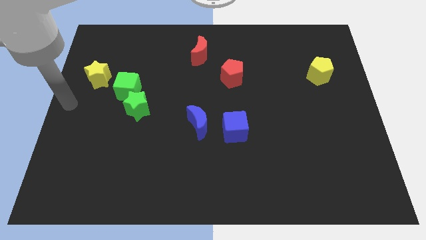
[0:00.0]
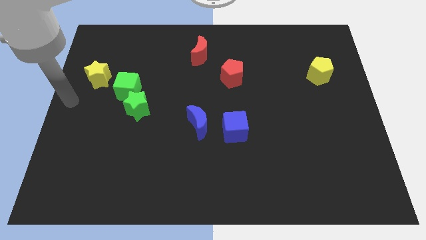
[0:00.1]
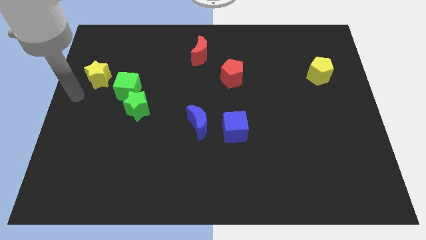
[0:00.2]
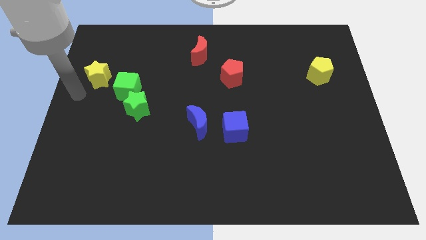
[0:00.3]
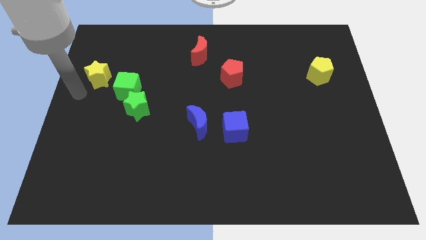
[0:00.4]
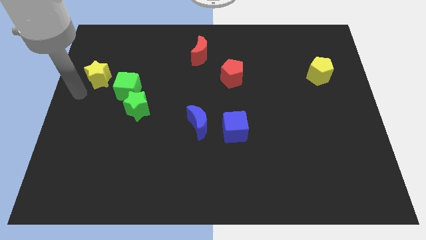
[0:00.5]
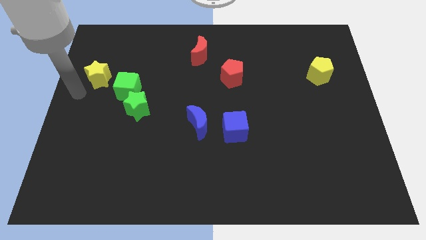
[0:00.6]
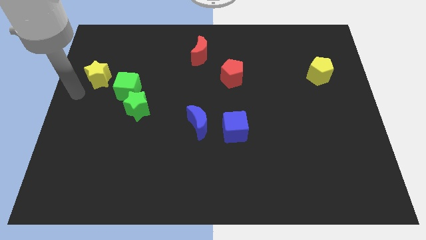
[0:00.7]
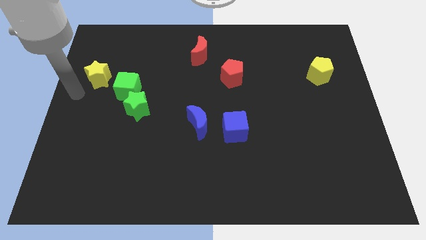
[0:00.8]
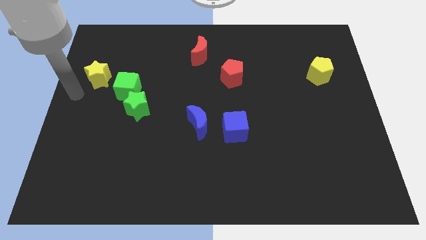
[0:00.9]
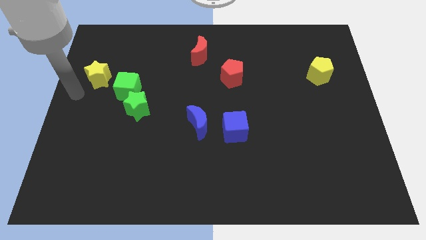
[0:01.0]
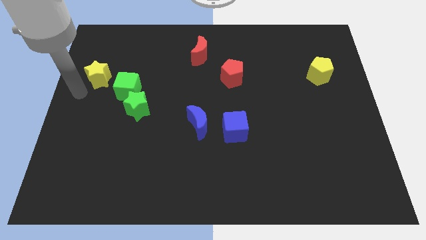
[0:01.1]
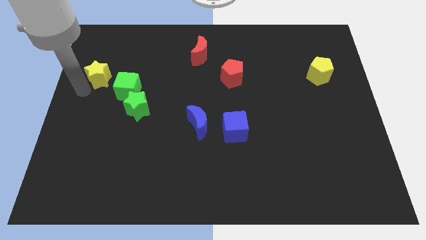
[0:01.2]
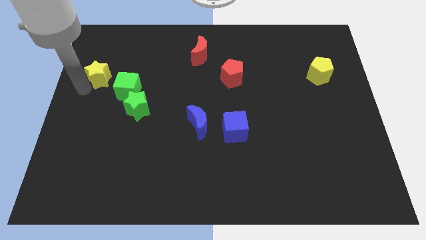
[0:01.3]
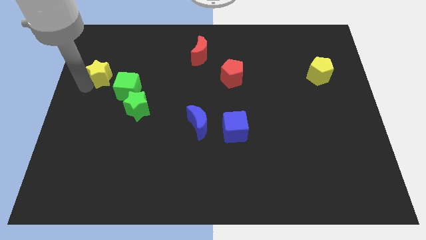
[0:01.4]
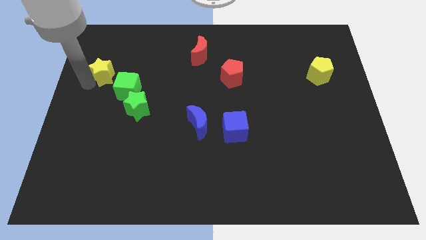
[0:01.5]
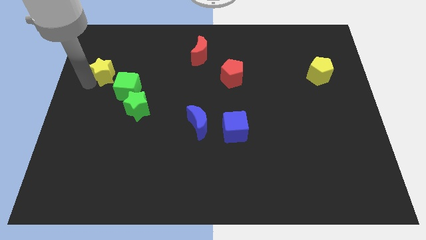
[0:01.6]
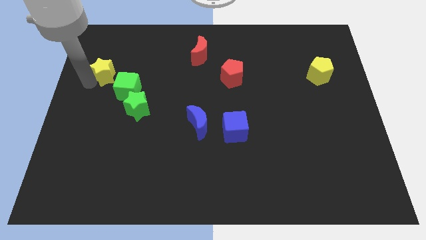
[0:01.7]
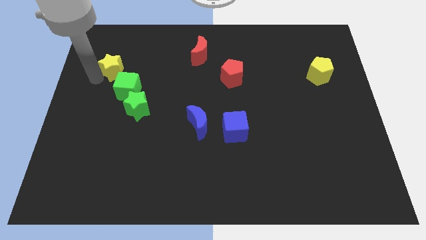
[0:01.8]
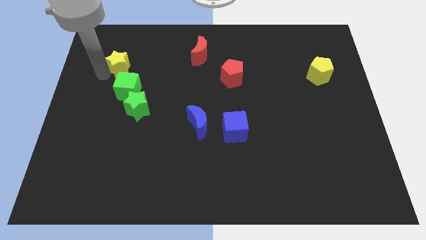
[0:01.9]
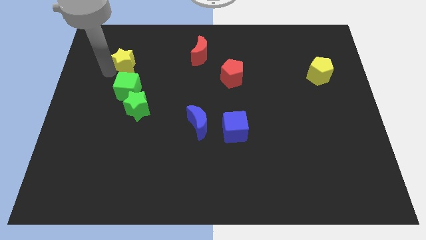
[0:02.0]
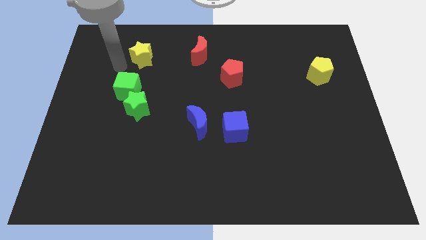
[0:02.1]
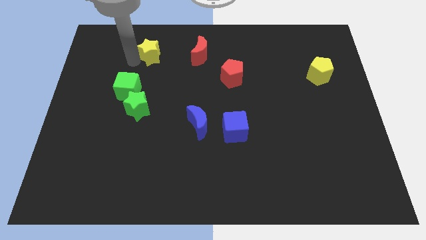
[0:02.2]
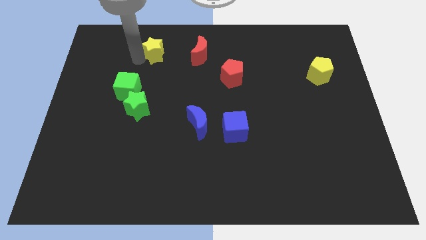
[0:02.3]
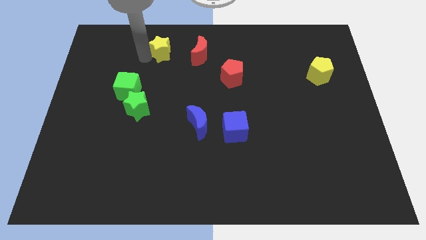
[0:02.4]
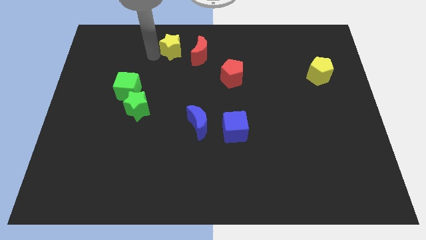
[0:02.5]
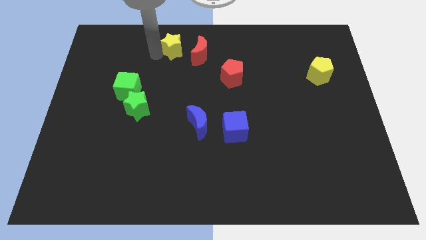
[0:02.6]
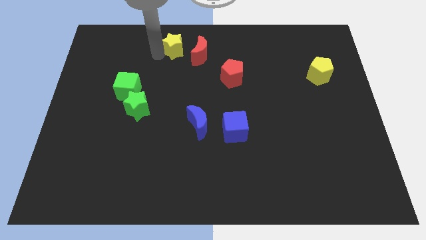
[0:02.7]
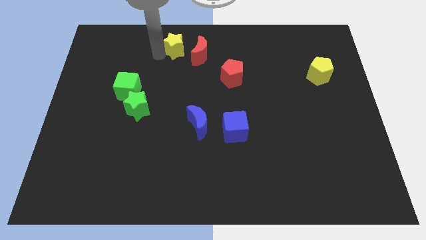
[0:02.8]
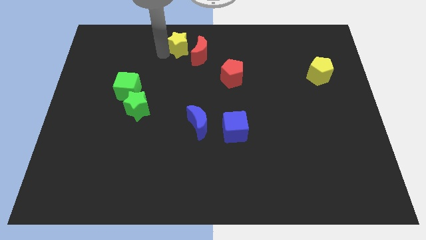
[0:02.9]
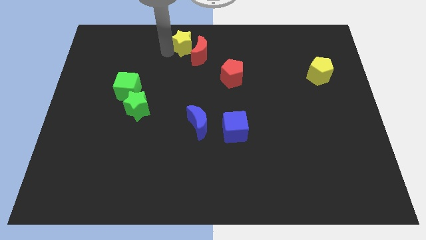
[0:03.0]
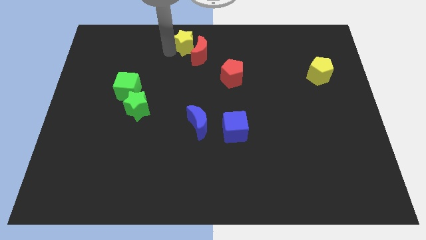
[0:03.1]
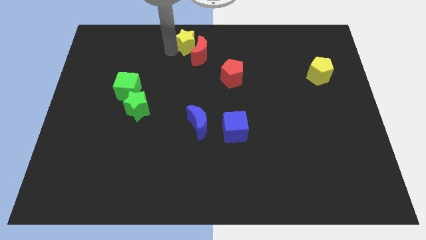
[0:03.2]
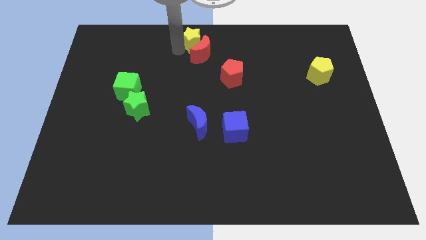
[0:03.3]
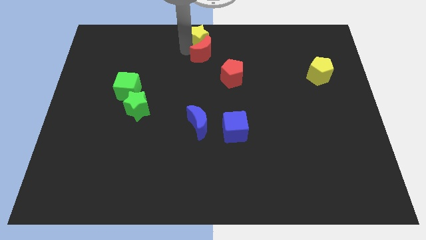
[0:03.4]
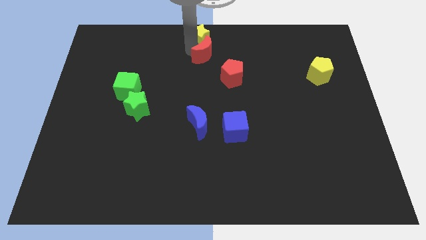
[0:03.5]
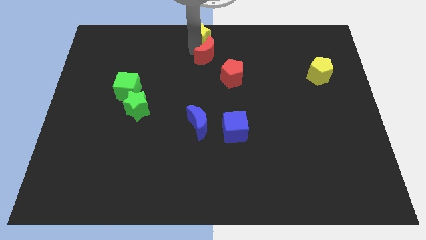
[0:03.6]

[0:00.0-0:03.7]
move the yellow star towards the top center of the board

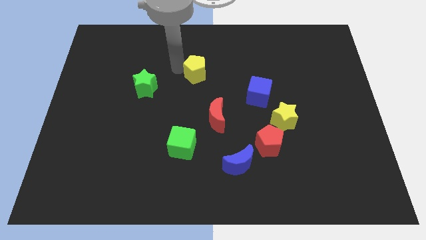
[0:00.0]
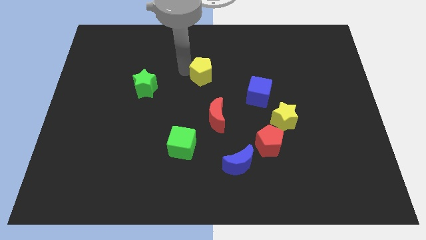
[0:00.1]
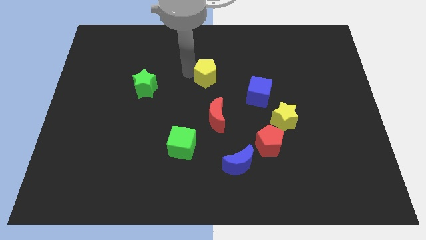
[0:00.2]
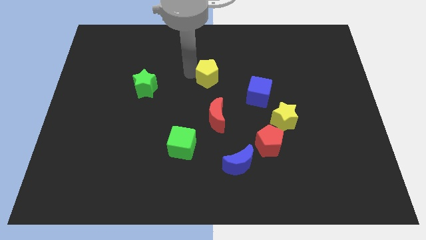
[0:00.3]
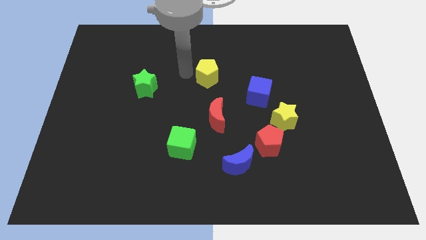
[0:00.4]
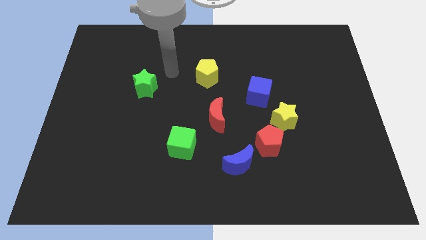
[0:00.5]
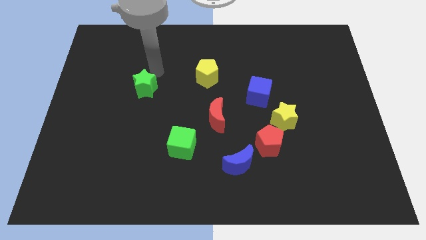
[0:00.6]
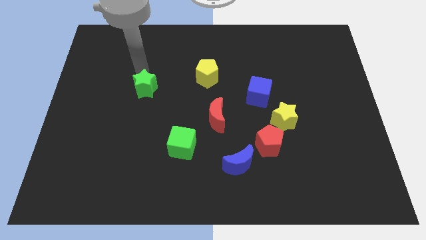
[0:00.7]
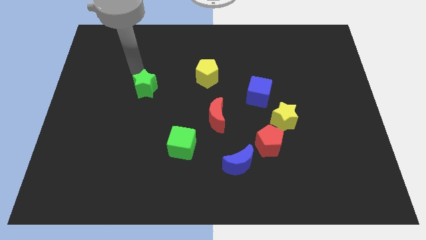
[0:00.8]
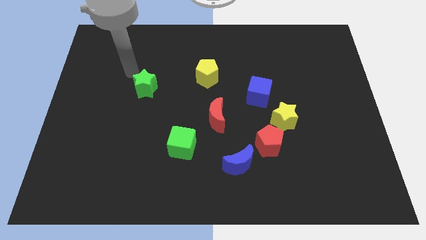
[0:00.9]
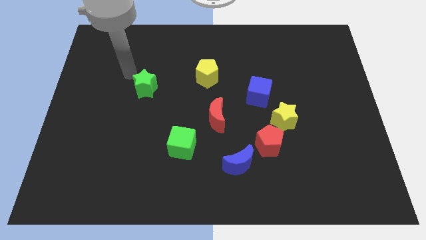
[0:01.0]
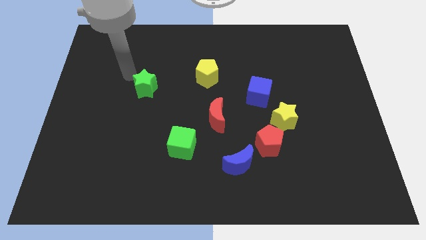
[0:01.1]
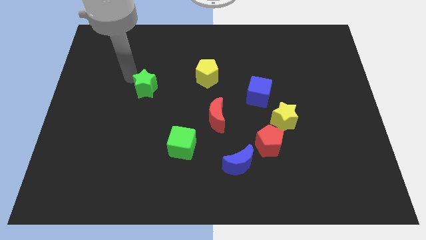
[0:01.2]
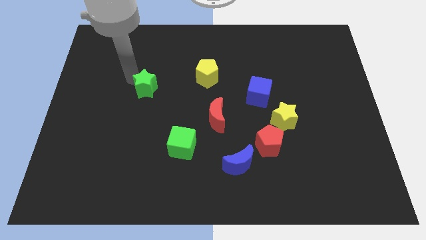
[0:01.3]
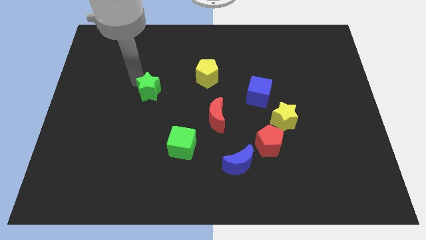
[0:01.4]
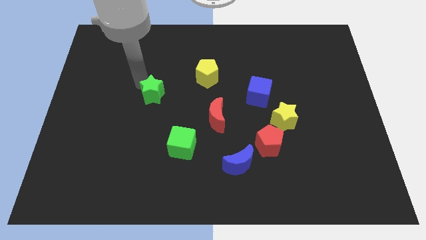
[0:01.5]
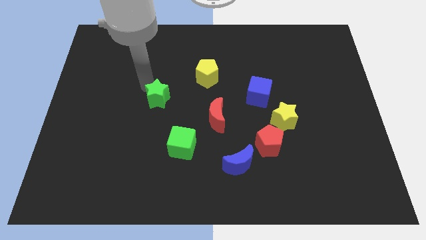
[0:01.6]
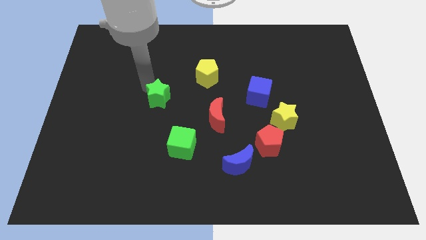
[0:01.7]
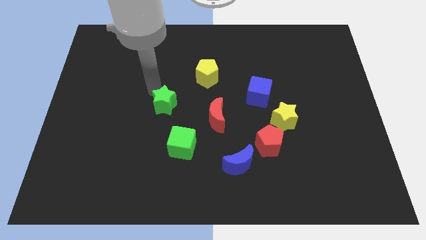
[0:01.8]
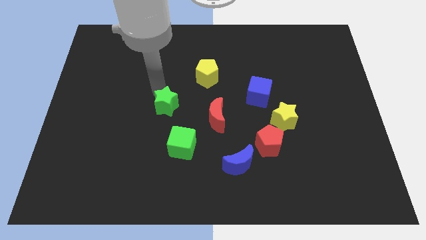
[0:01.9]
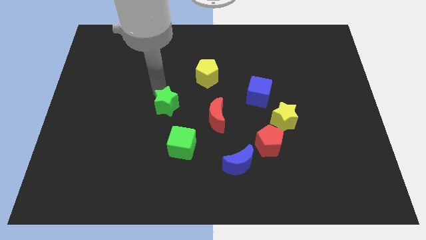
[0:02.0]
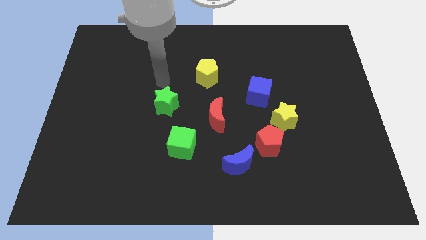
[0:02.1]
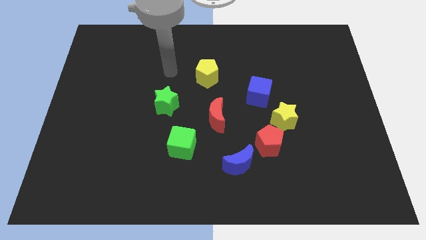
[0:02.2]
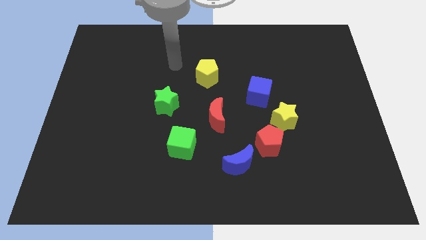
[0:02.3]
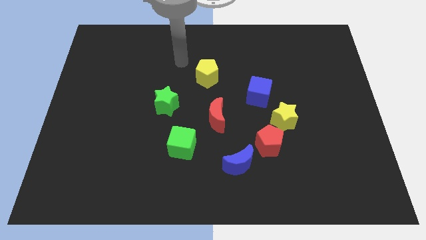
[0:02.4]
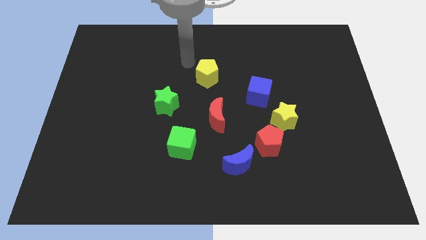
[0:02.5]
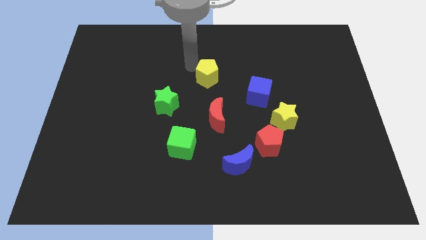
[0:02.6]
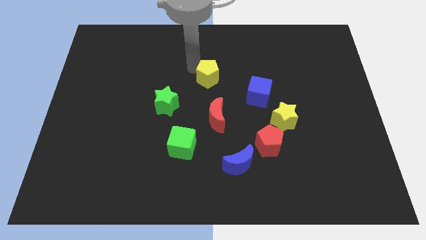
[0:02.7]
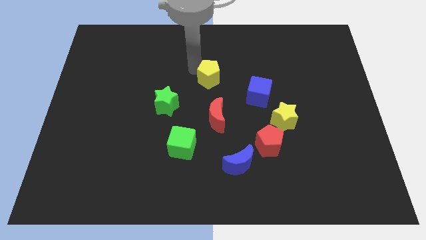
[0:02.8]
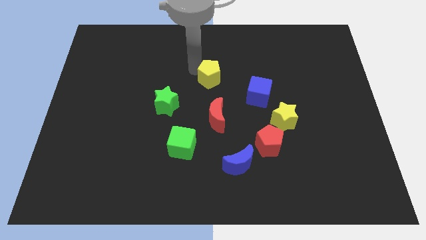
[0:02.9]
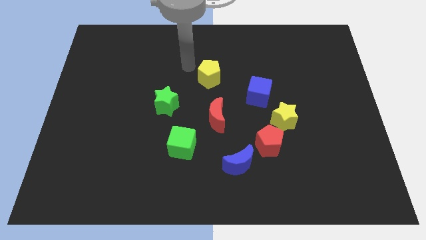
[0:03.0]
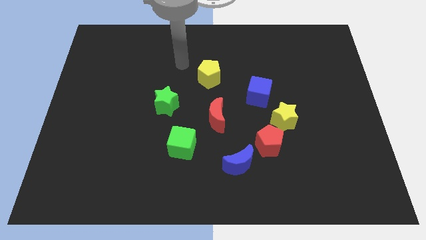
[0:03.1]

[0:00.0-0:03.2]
place green star to the left of red moon

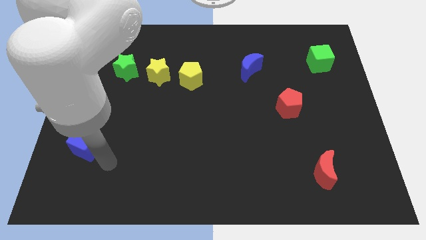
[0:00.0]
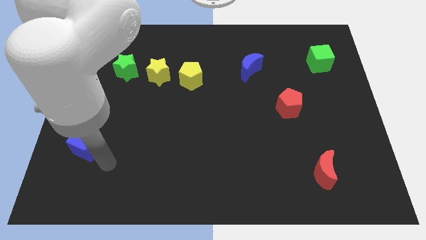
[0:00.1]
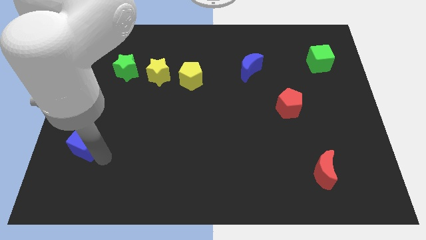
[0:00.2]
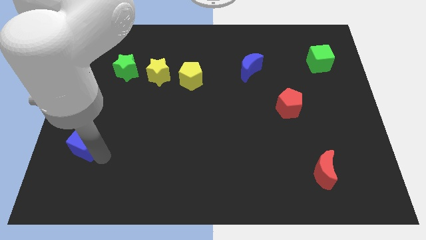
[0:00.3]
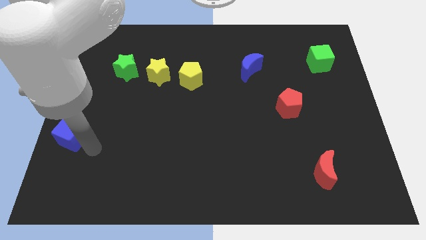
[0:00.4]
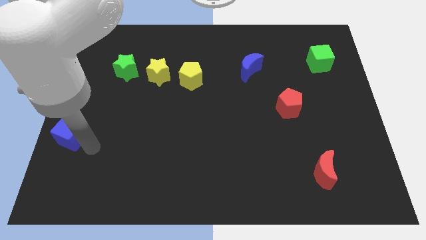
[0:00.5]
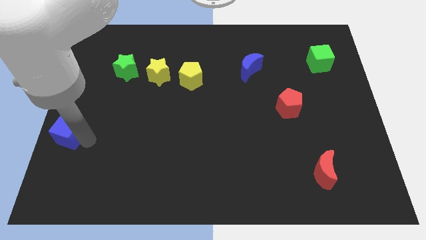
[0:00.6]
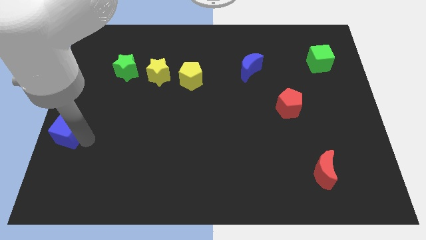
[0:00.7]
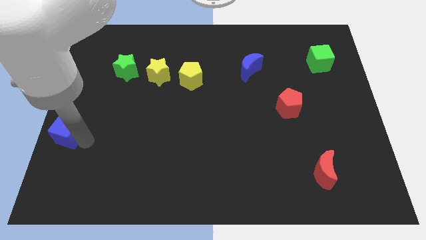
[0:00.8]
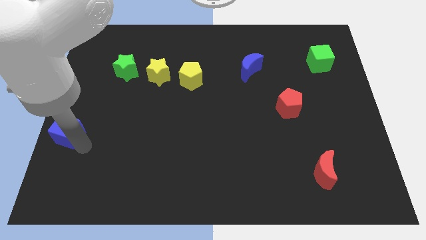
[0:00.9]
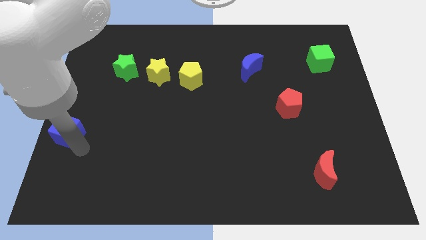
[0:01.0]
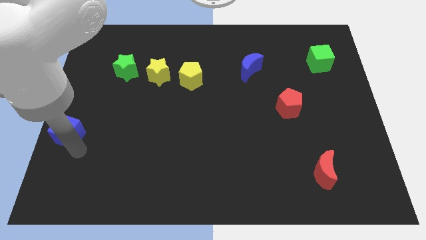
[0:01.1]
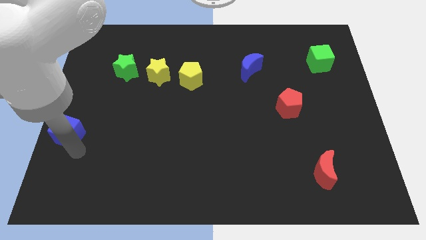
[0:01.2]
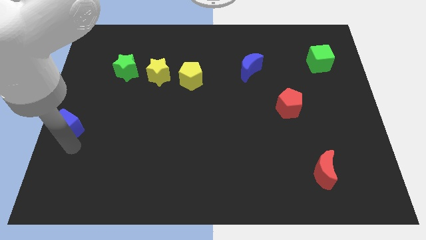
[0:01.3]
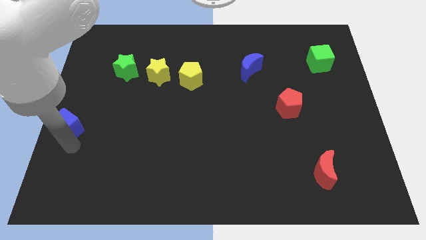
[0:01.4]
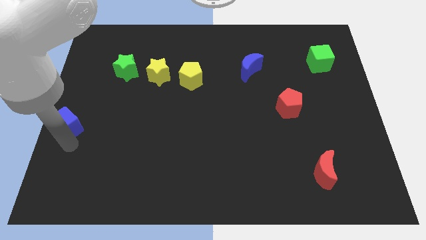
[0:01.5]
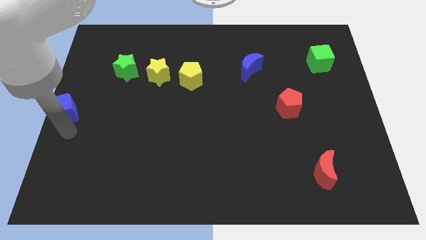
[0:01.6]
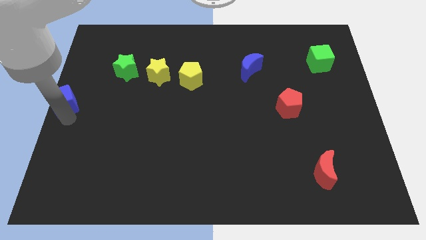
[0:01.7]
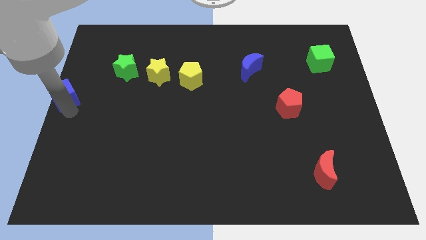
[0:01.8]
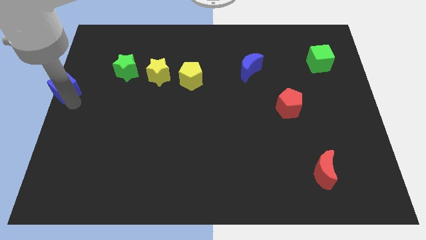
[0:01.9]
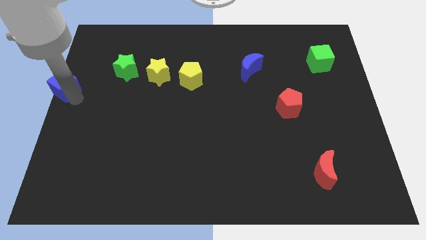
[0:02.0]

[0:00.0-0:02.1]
push blue cube towards center left
